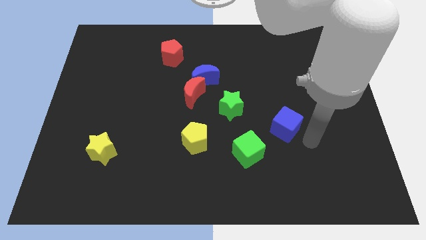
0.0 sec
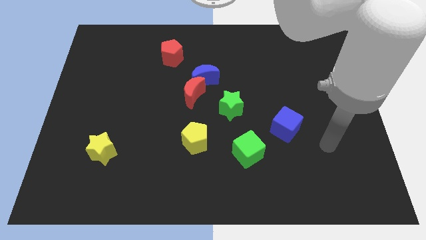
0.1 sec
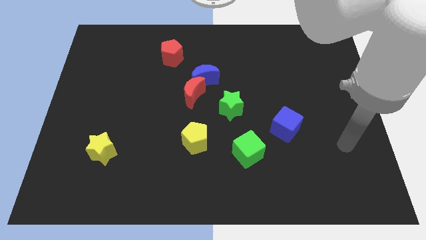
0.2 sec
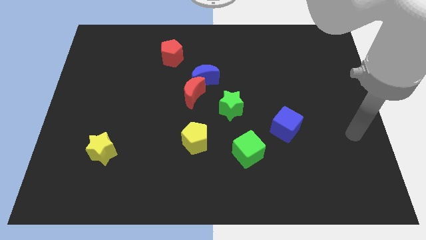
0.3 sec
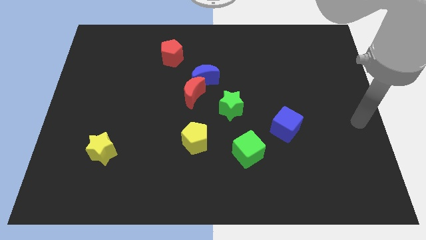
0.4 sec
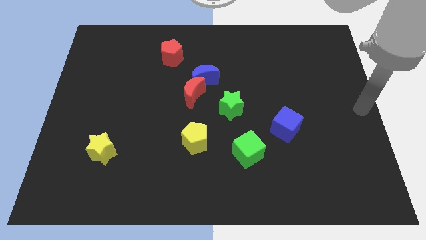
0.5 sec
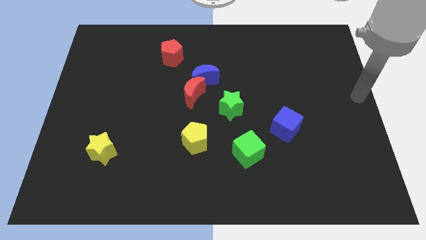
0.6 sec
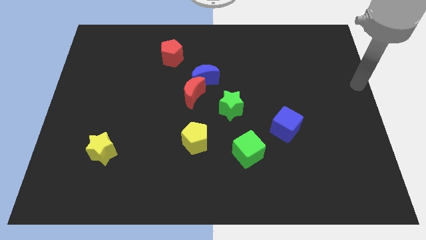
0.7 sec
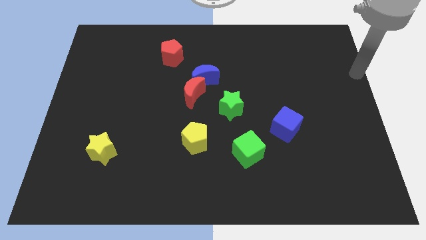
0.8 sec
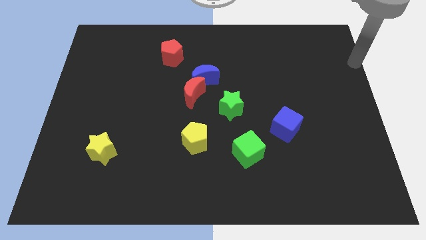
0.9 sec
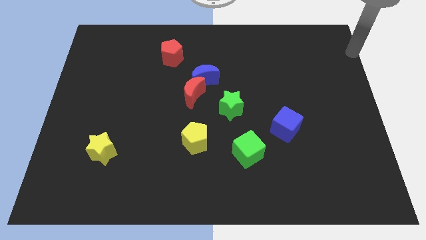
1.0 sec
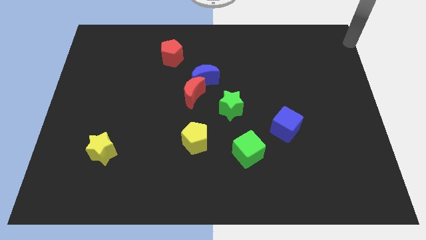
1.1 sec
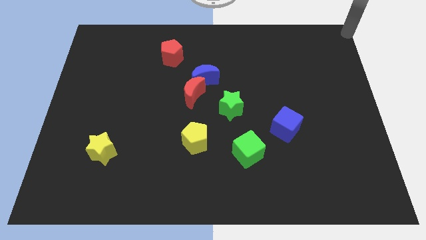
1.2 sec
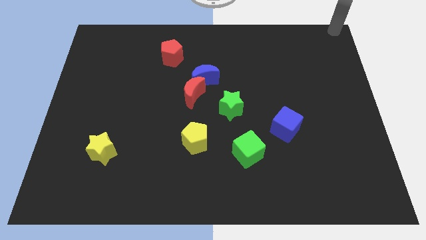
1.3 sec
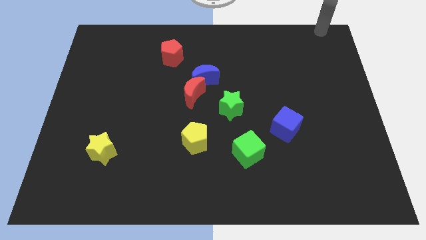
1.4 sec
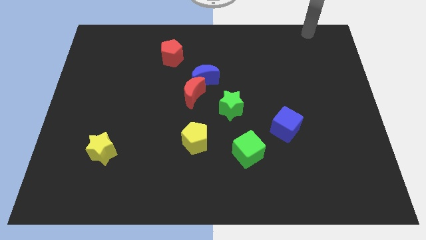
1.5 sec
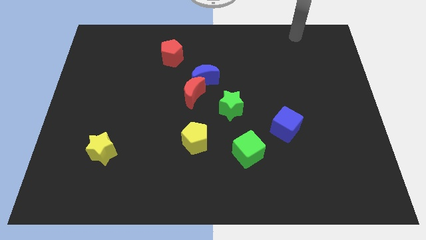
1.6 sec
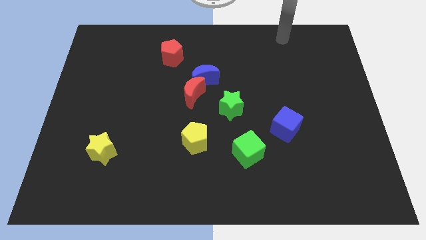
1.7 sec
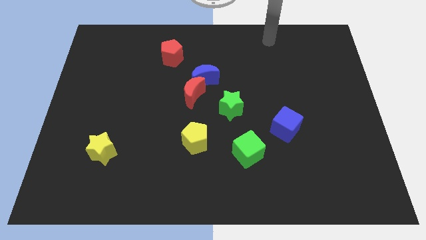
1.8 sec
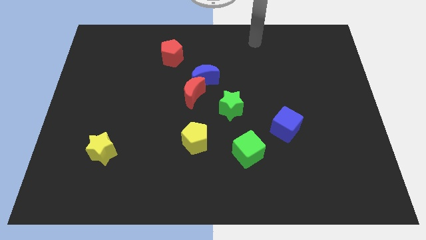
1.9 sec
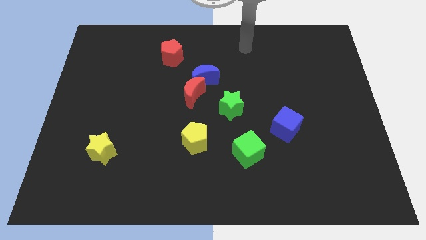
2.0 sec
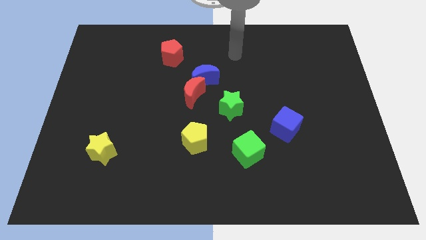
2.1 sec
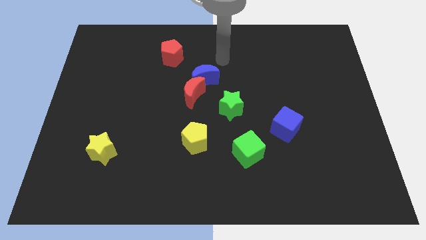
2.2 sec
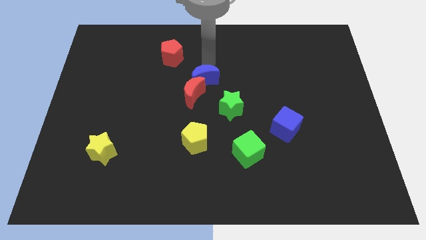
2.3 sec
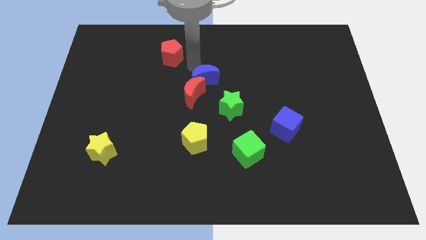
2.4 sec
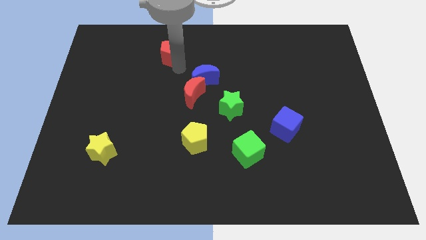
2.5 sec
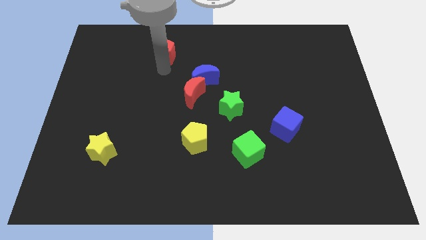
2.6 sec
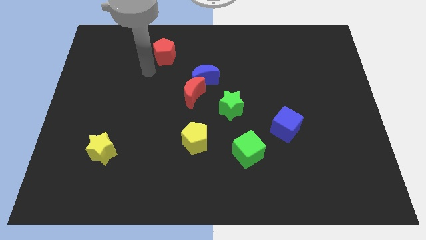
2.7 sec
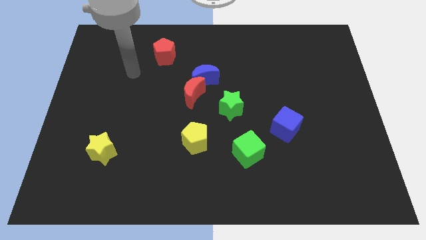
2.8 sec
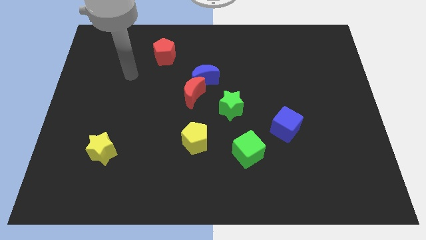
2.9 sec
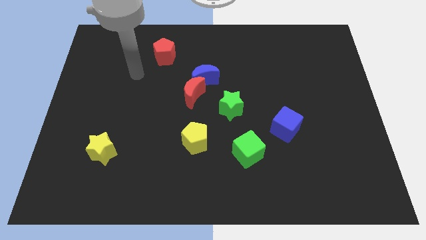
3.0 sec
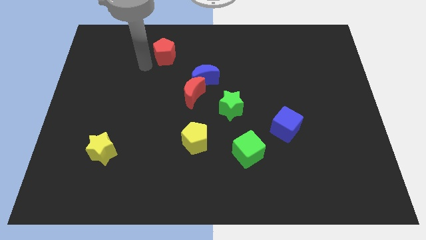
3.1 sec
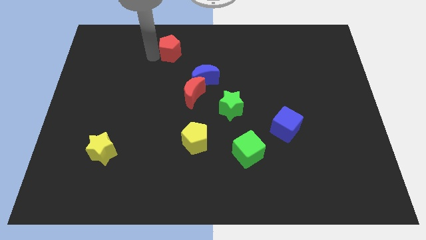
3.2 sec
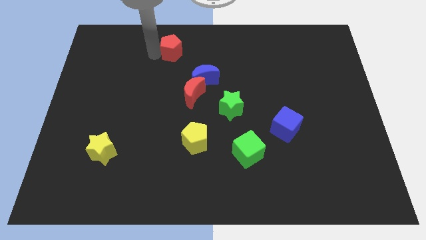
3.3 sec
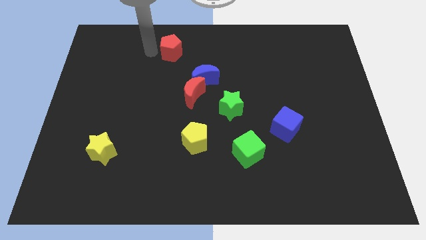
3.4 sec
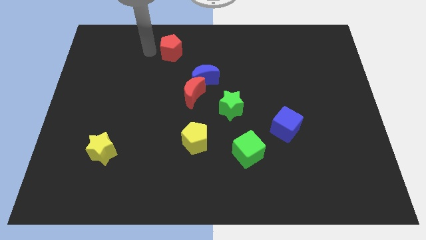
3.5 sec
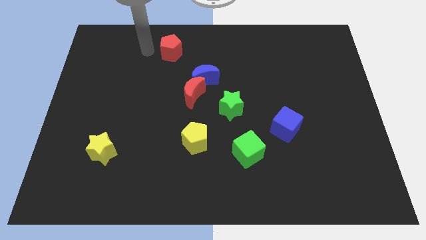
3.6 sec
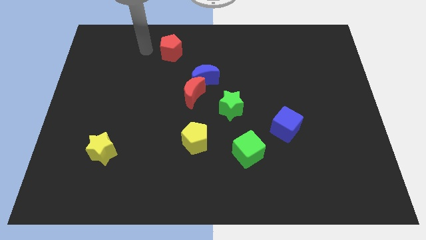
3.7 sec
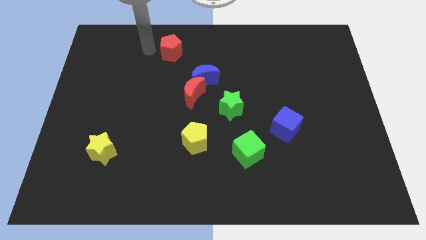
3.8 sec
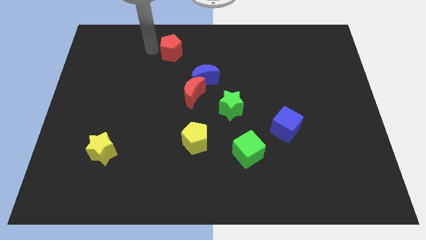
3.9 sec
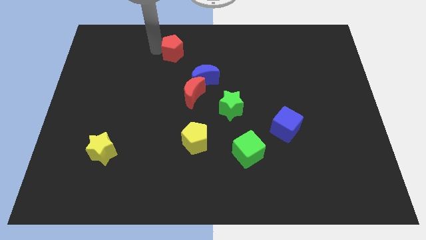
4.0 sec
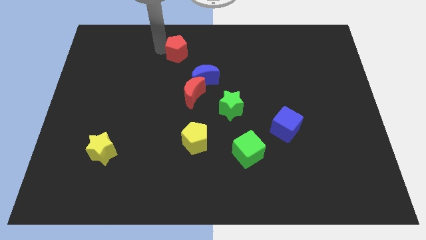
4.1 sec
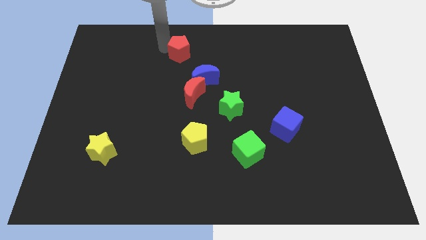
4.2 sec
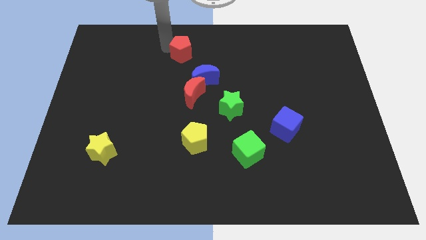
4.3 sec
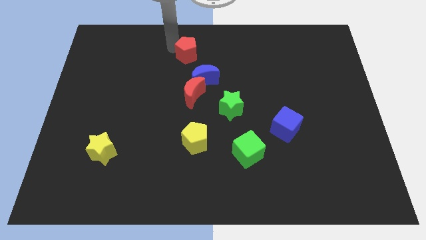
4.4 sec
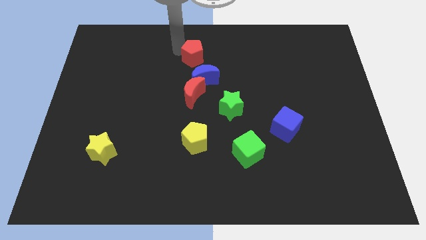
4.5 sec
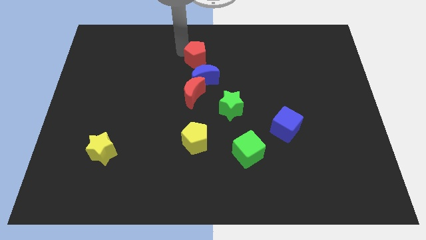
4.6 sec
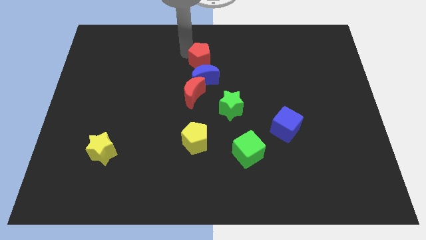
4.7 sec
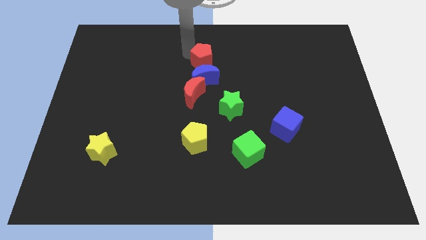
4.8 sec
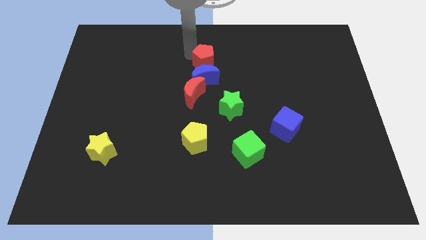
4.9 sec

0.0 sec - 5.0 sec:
push the red pentagon to the top of the blue moon

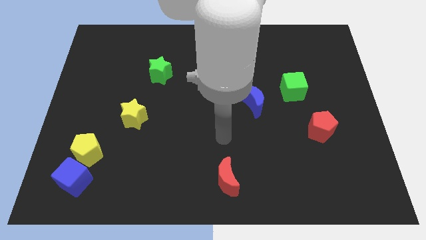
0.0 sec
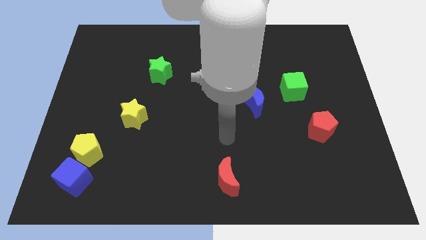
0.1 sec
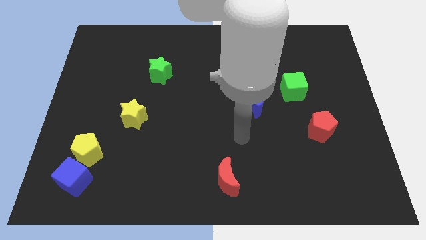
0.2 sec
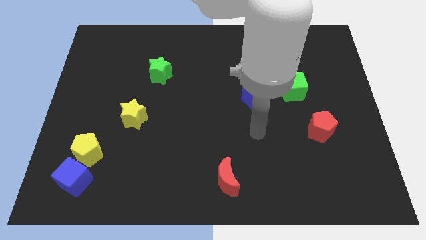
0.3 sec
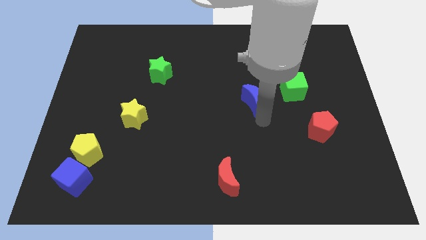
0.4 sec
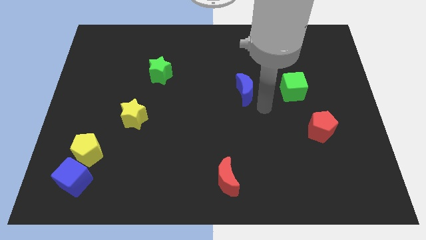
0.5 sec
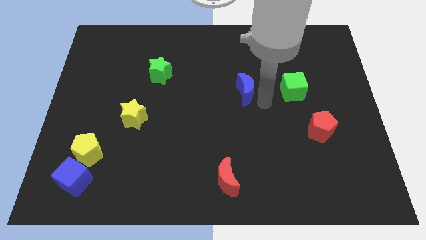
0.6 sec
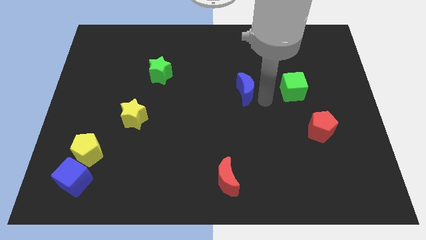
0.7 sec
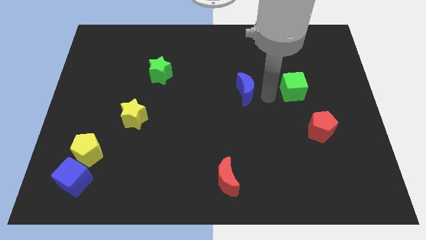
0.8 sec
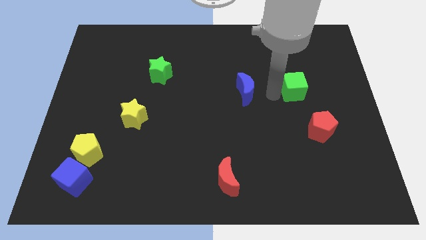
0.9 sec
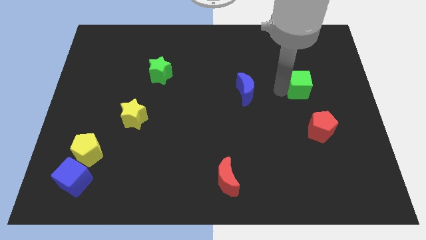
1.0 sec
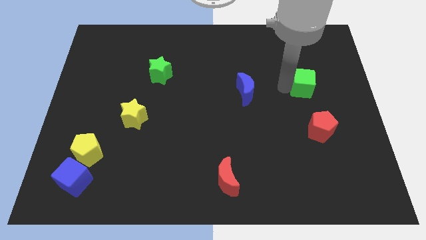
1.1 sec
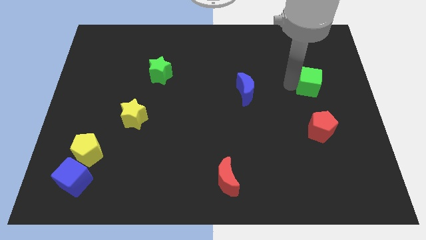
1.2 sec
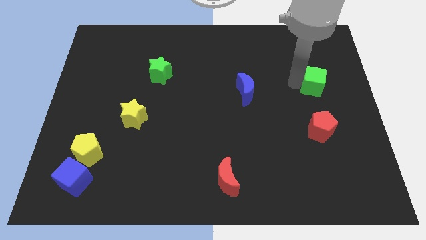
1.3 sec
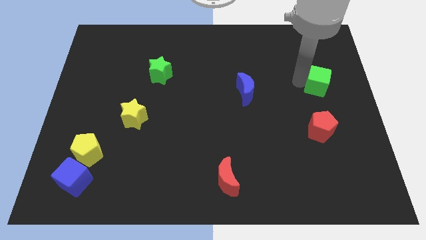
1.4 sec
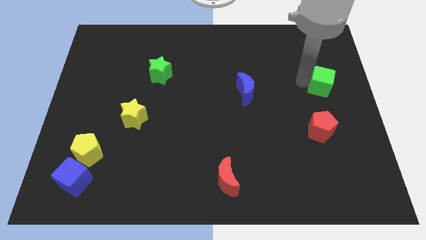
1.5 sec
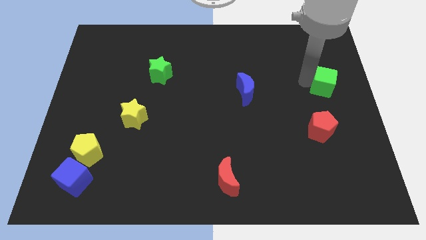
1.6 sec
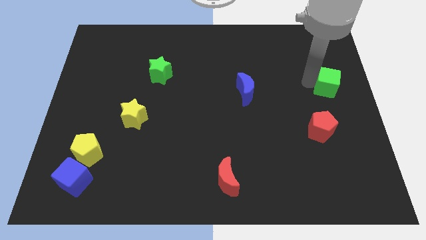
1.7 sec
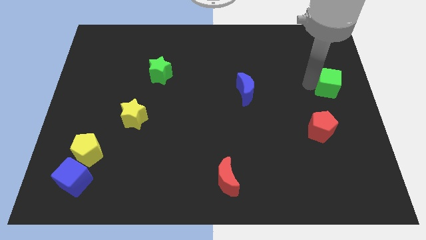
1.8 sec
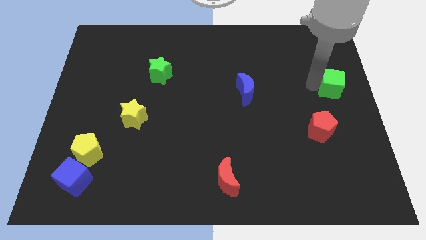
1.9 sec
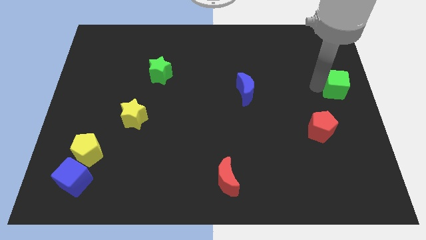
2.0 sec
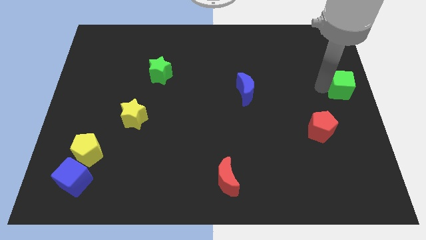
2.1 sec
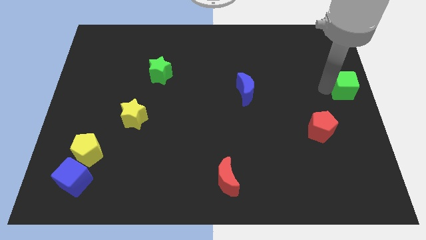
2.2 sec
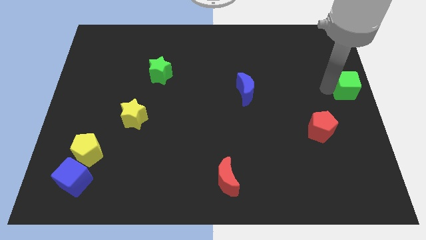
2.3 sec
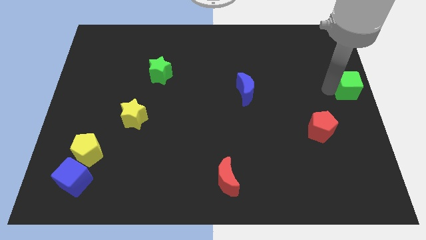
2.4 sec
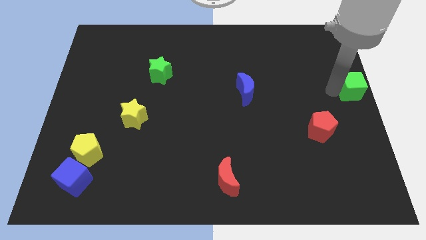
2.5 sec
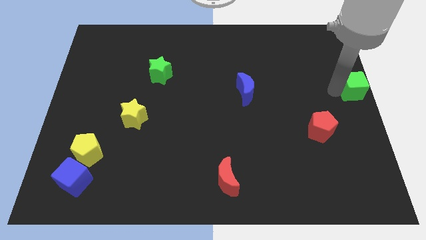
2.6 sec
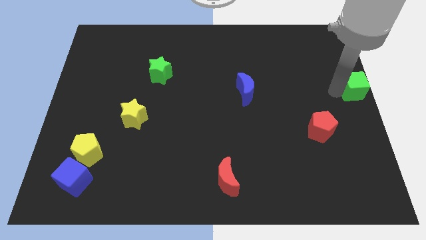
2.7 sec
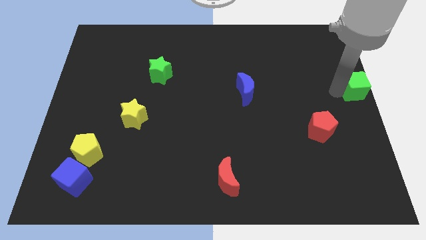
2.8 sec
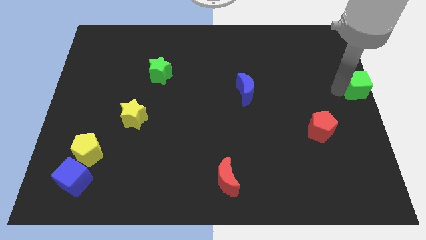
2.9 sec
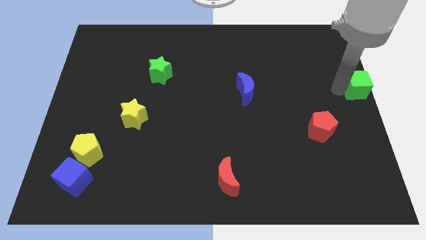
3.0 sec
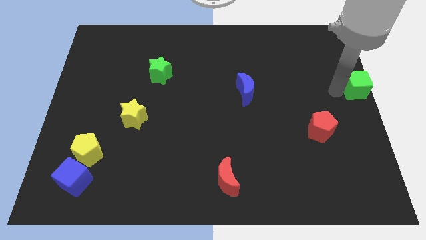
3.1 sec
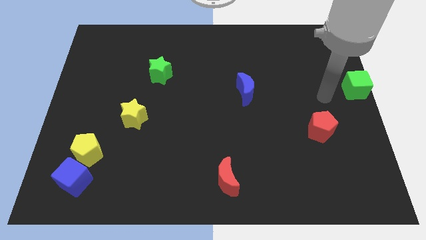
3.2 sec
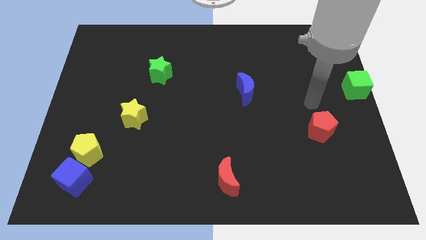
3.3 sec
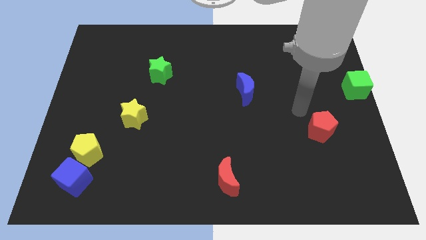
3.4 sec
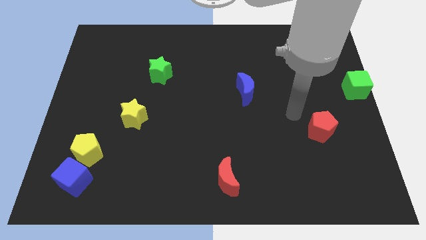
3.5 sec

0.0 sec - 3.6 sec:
push the green cube to the right

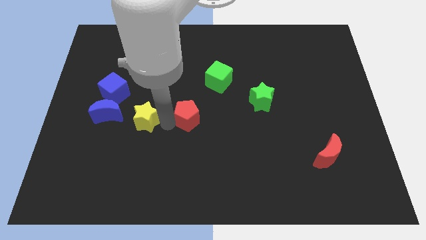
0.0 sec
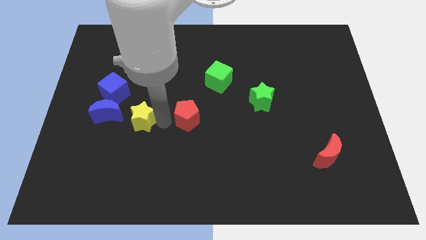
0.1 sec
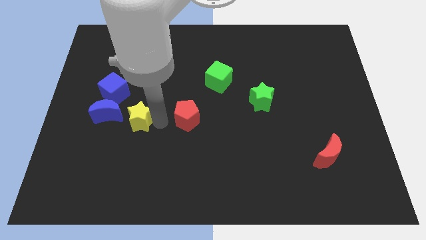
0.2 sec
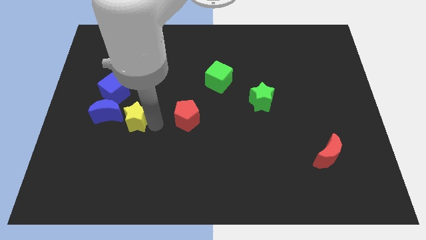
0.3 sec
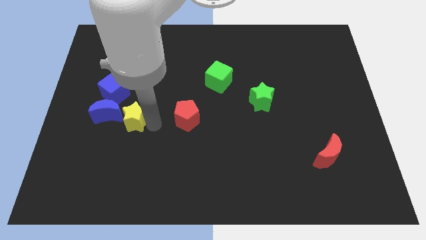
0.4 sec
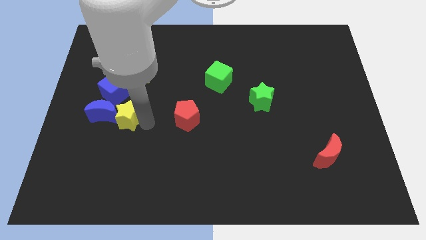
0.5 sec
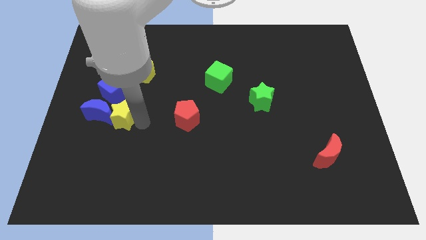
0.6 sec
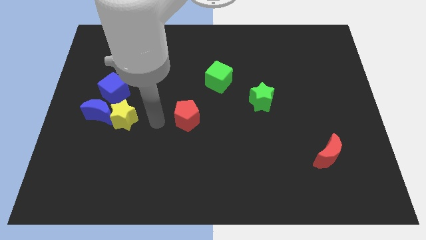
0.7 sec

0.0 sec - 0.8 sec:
push yellow star into the blue crescent
